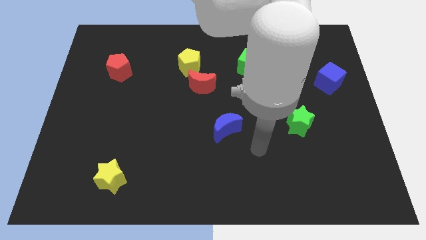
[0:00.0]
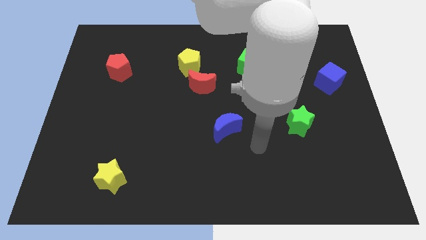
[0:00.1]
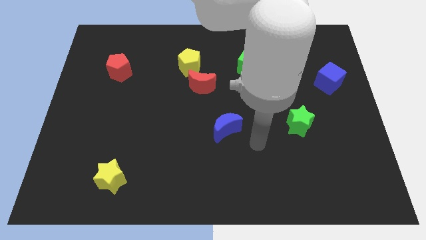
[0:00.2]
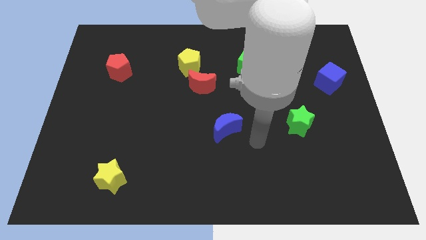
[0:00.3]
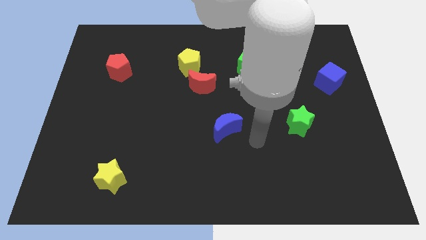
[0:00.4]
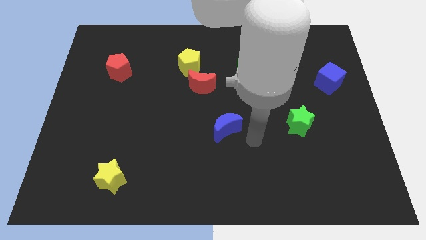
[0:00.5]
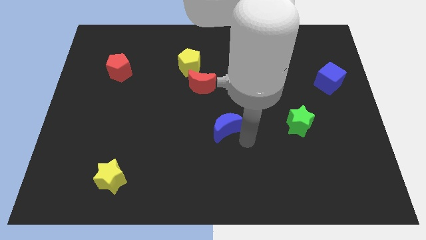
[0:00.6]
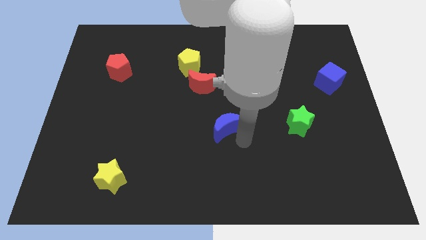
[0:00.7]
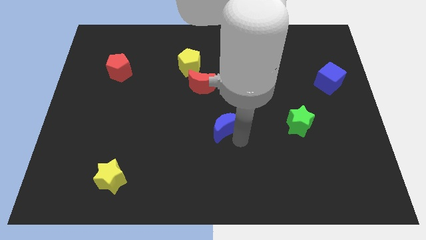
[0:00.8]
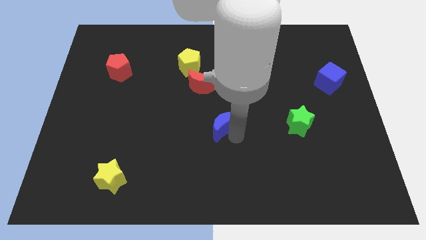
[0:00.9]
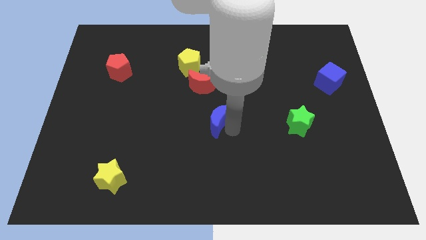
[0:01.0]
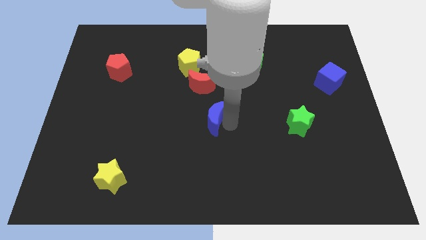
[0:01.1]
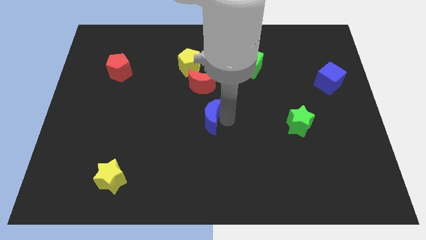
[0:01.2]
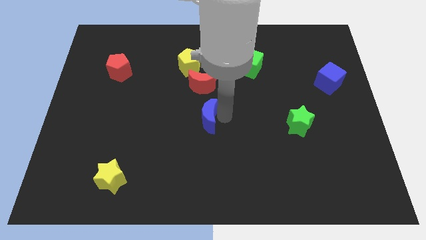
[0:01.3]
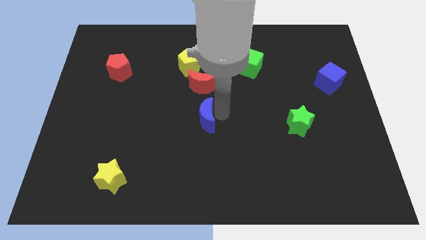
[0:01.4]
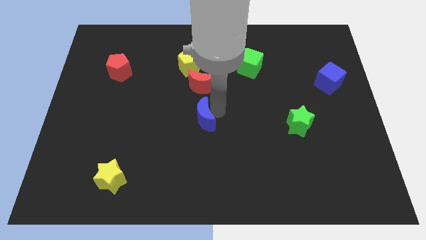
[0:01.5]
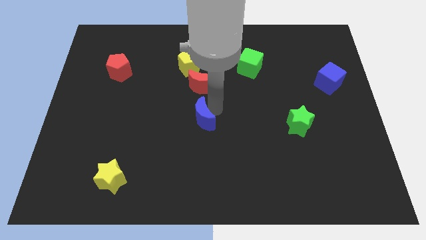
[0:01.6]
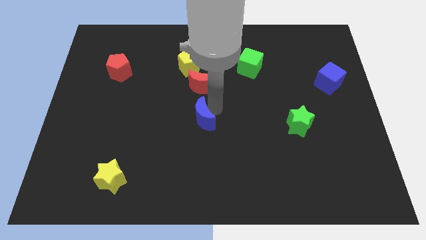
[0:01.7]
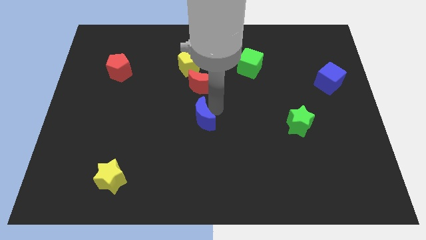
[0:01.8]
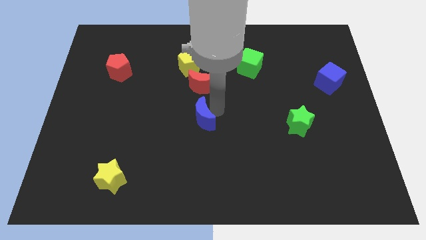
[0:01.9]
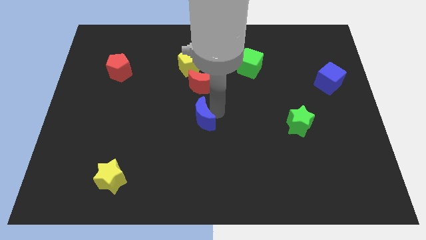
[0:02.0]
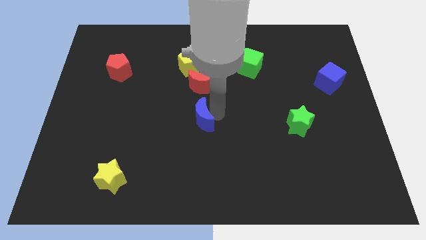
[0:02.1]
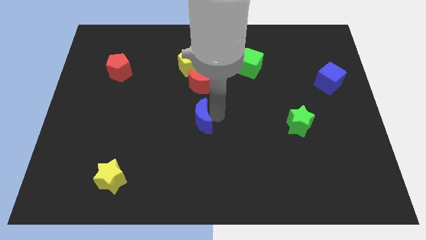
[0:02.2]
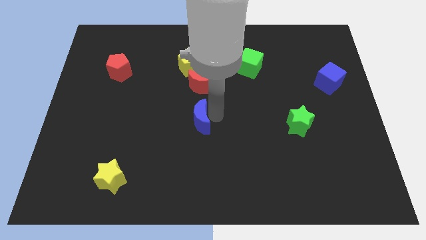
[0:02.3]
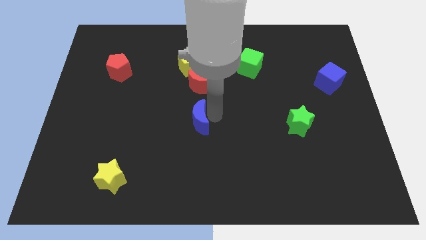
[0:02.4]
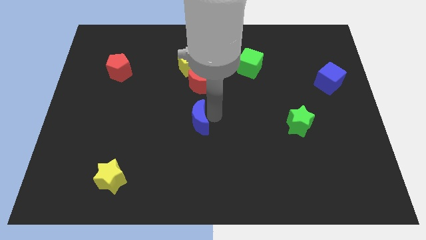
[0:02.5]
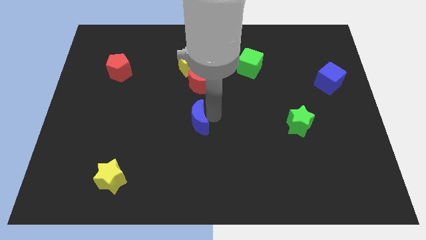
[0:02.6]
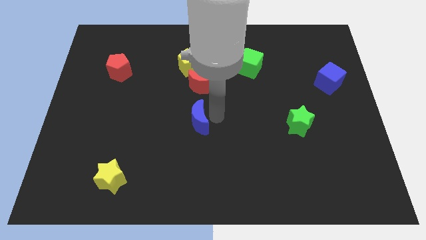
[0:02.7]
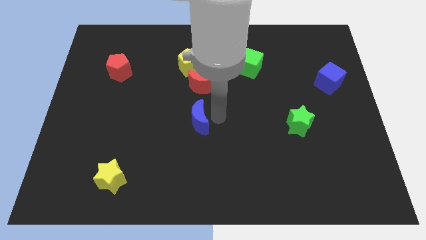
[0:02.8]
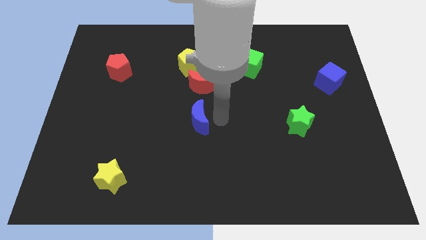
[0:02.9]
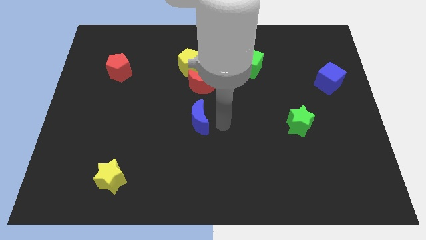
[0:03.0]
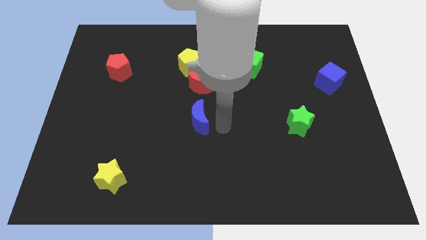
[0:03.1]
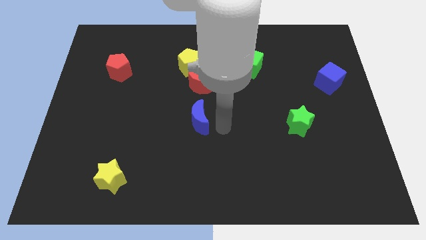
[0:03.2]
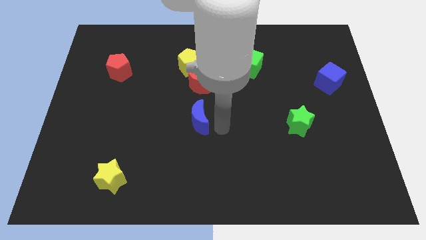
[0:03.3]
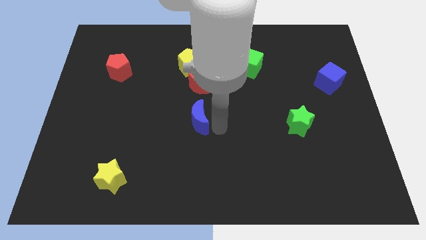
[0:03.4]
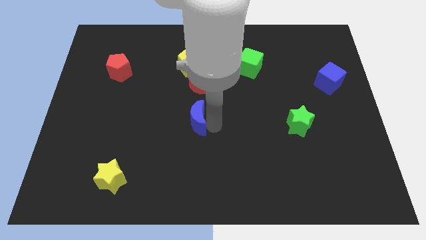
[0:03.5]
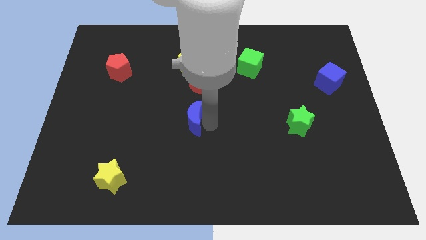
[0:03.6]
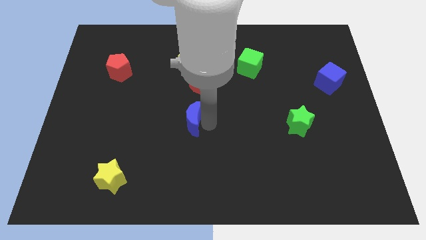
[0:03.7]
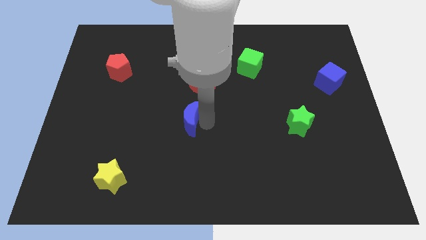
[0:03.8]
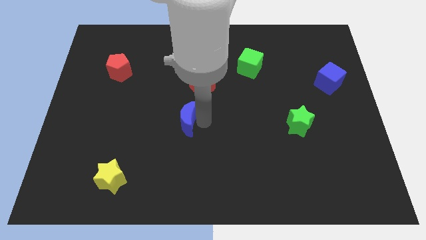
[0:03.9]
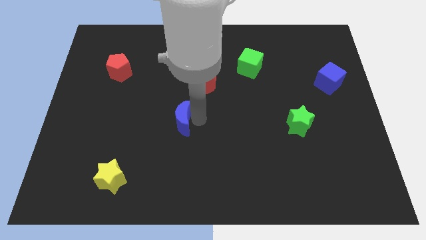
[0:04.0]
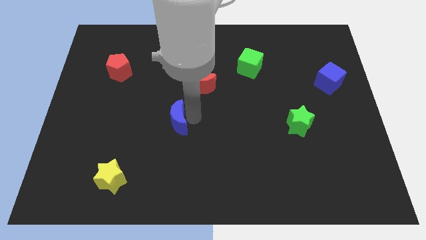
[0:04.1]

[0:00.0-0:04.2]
place the blue moon left to the green star

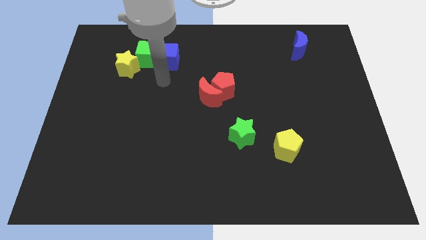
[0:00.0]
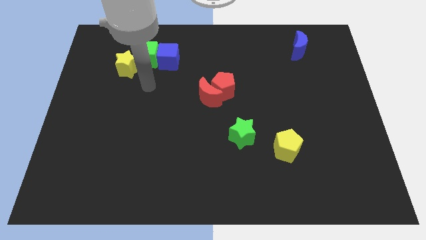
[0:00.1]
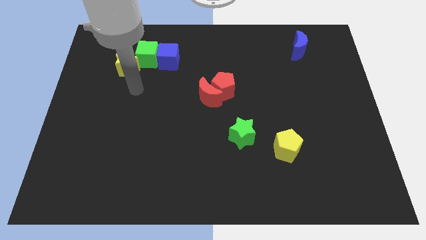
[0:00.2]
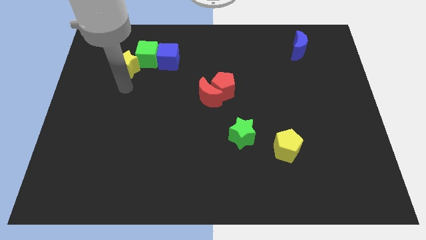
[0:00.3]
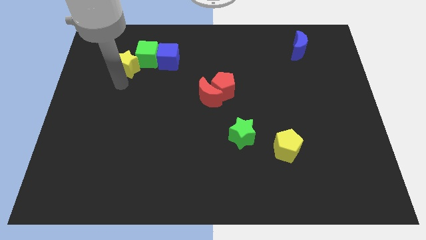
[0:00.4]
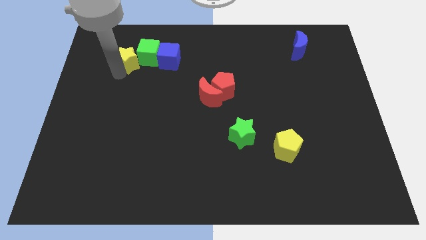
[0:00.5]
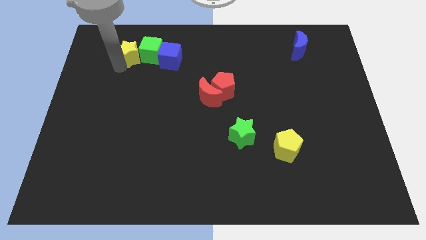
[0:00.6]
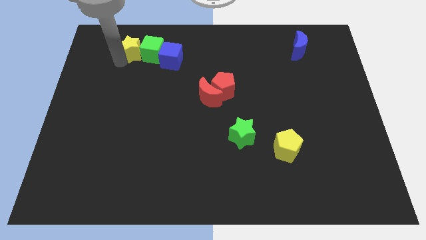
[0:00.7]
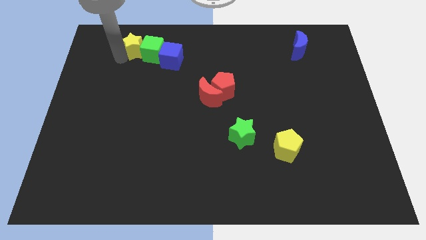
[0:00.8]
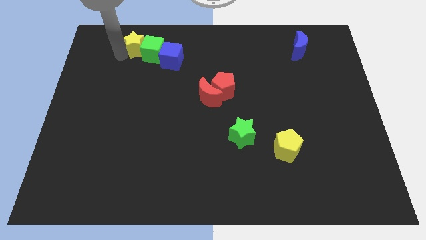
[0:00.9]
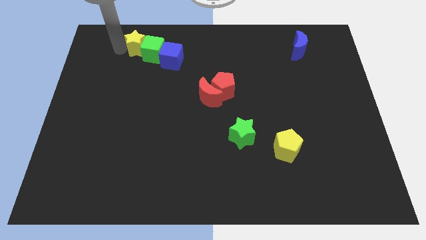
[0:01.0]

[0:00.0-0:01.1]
move yellow star slightly up

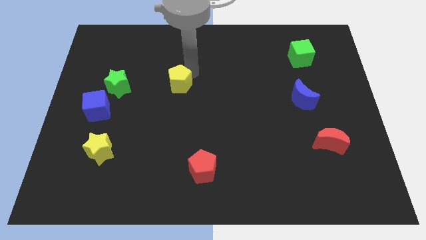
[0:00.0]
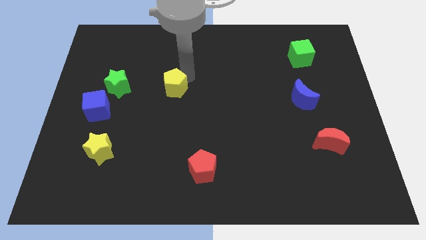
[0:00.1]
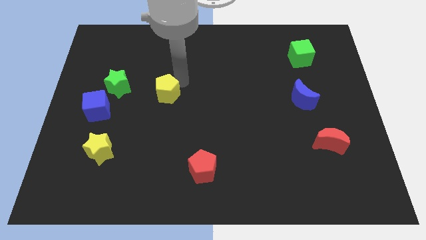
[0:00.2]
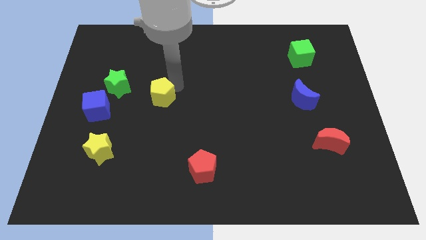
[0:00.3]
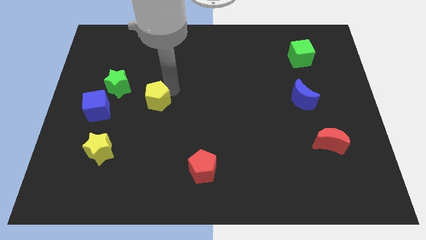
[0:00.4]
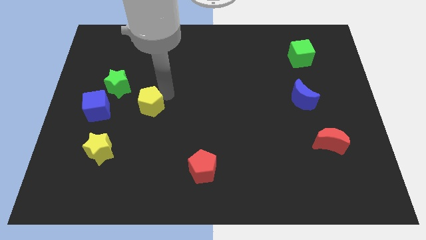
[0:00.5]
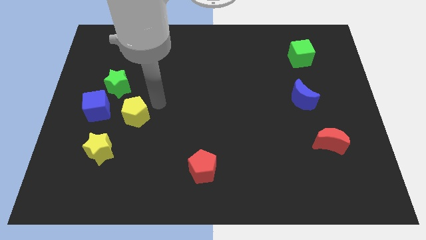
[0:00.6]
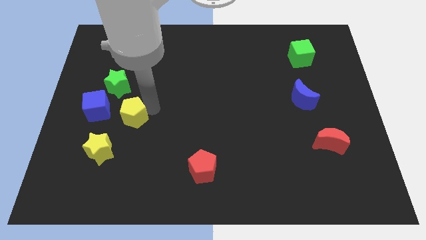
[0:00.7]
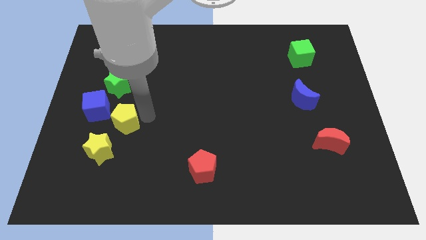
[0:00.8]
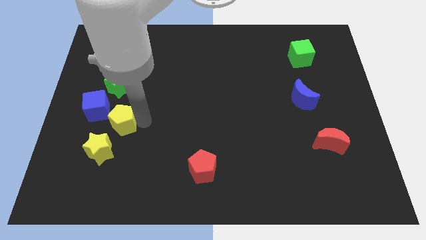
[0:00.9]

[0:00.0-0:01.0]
put the yellow pentagon at the bottom right of the blue cube

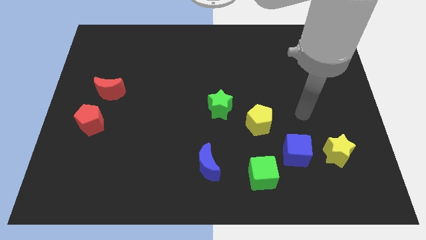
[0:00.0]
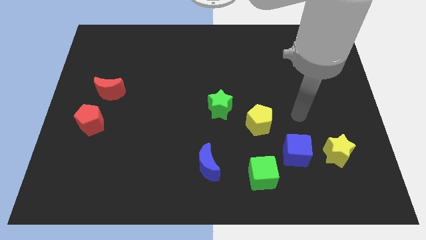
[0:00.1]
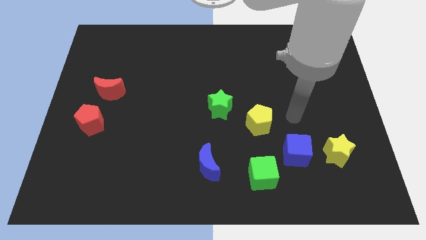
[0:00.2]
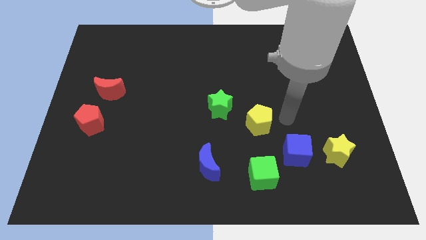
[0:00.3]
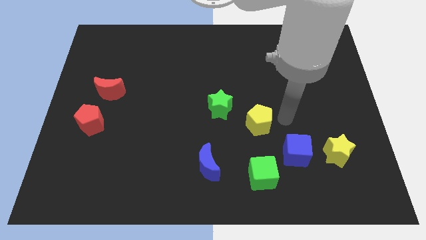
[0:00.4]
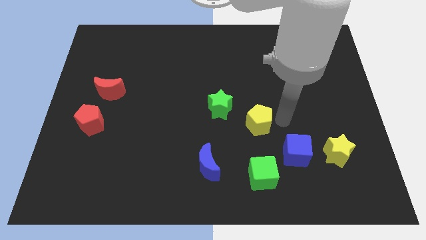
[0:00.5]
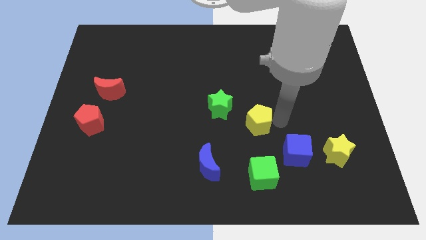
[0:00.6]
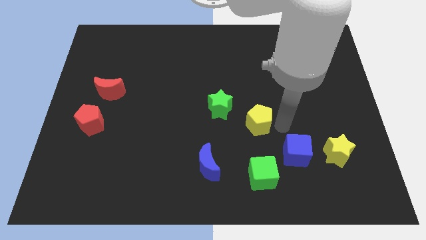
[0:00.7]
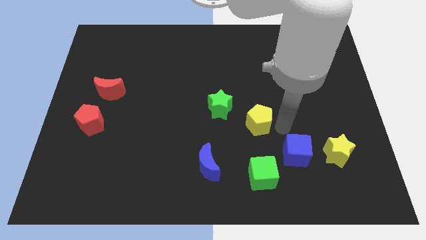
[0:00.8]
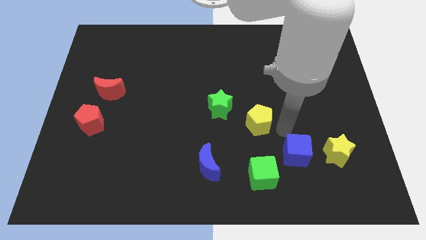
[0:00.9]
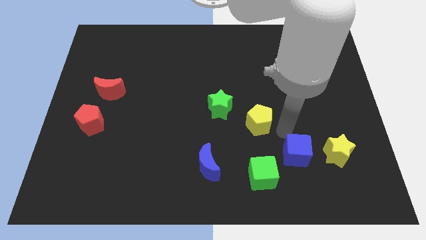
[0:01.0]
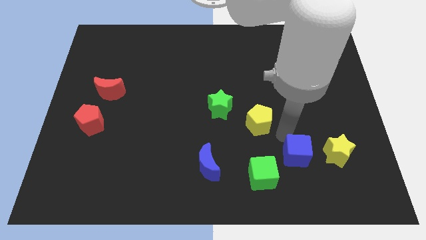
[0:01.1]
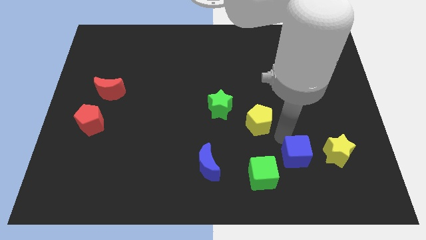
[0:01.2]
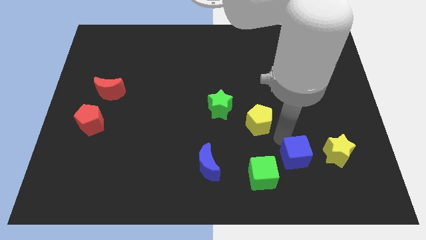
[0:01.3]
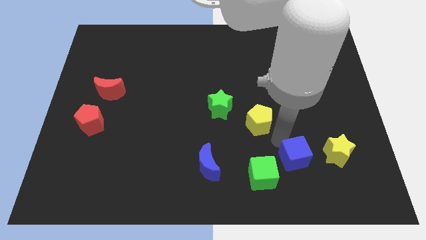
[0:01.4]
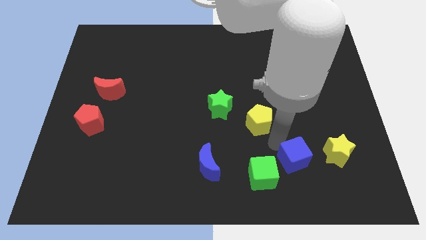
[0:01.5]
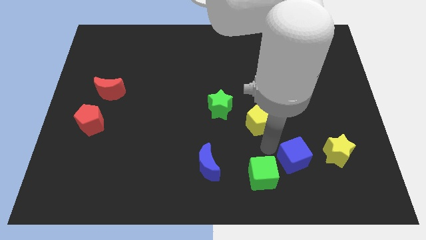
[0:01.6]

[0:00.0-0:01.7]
tap at the left side of the blue cube

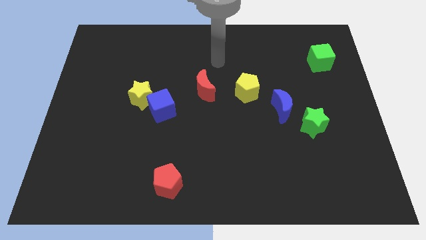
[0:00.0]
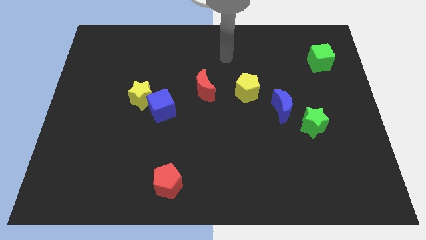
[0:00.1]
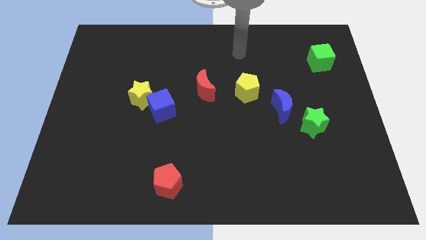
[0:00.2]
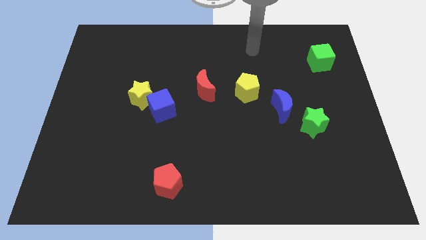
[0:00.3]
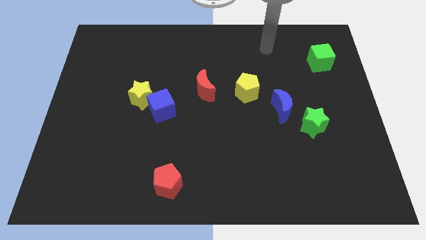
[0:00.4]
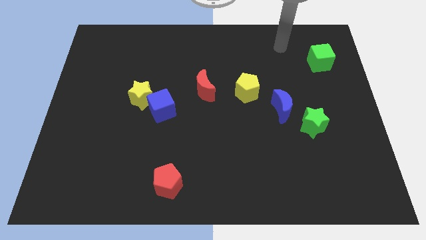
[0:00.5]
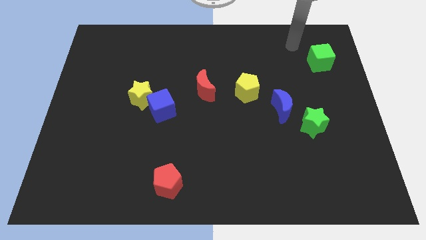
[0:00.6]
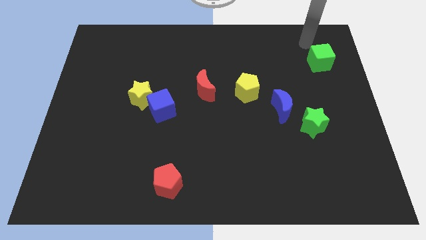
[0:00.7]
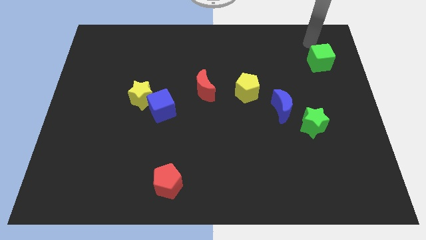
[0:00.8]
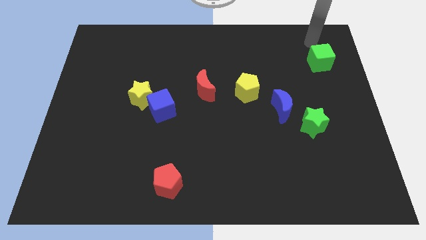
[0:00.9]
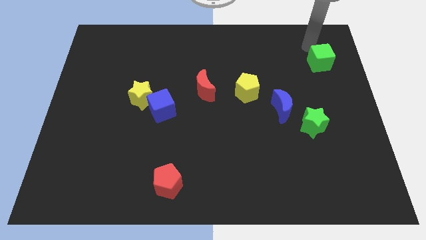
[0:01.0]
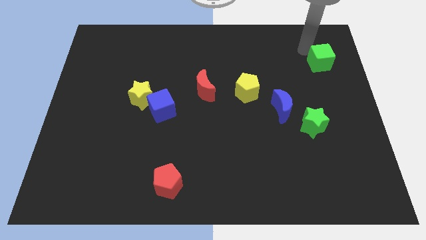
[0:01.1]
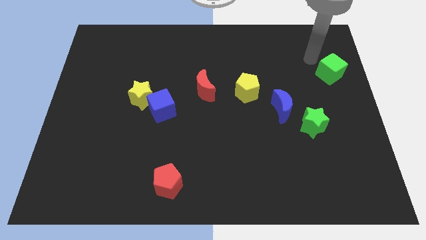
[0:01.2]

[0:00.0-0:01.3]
move your arm towards the top left of the green cube
